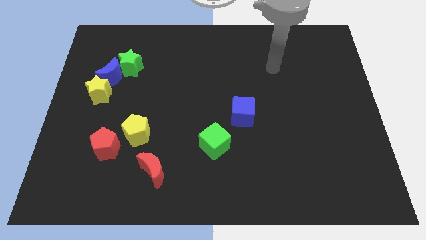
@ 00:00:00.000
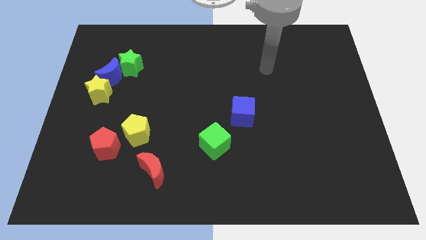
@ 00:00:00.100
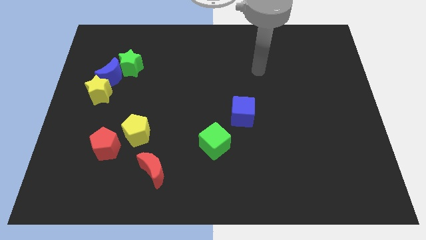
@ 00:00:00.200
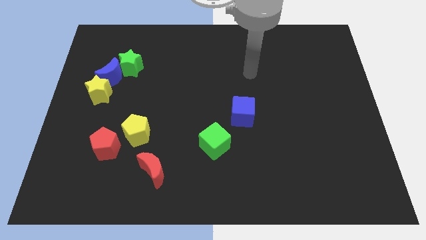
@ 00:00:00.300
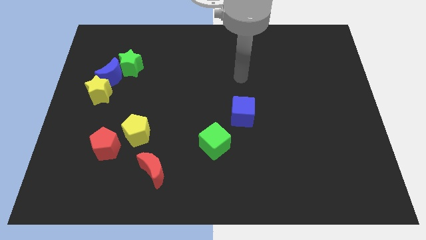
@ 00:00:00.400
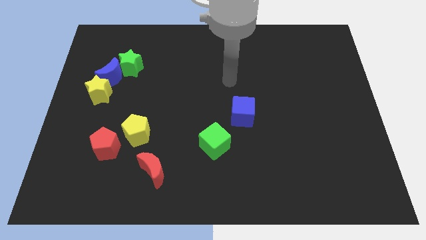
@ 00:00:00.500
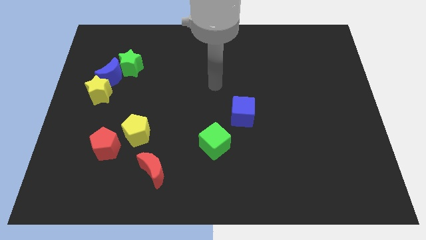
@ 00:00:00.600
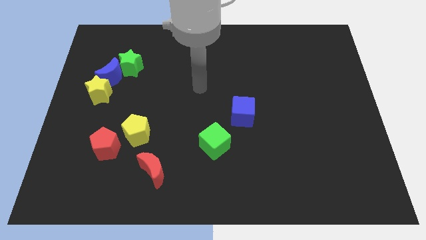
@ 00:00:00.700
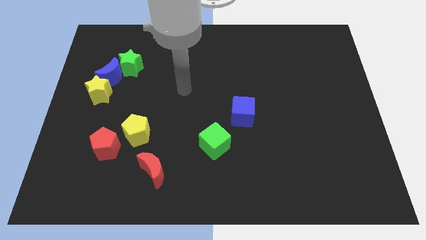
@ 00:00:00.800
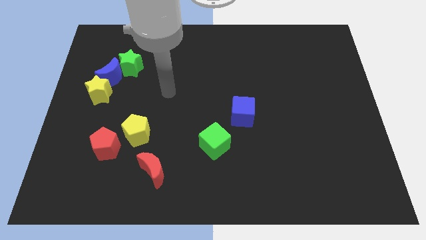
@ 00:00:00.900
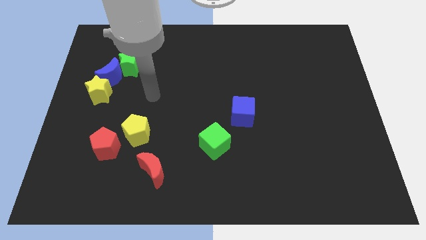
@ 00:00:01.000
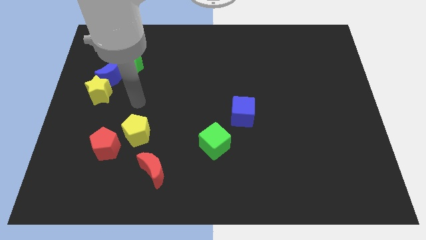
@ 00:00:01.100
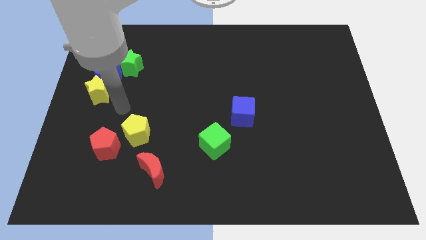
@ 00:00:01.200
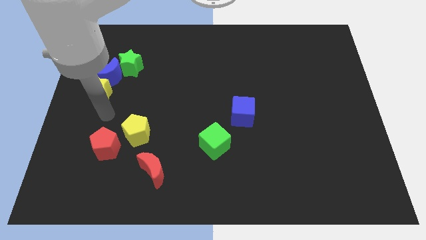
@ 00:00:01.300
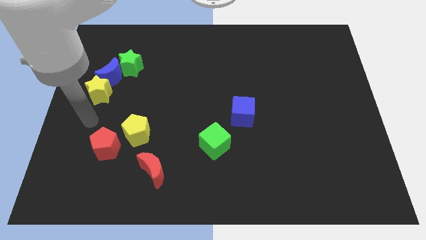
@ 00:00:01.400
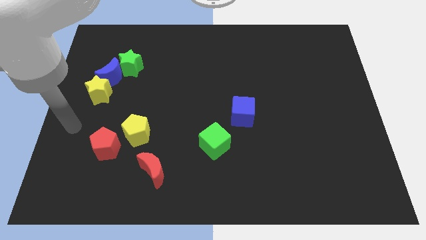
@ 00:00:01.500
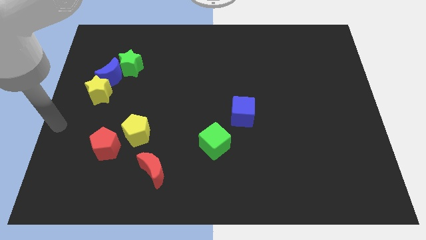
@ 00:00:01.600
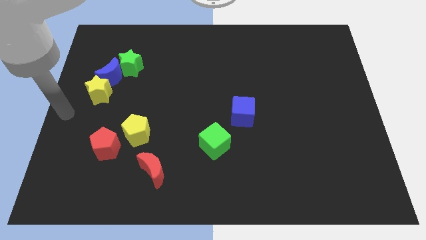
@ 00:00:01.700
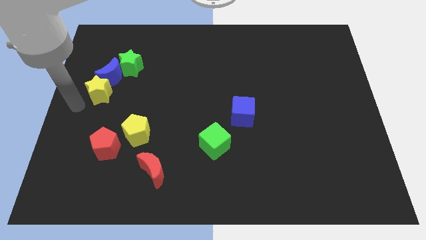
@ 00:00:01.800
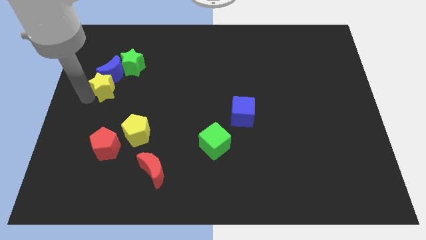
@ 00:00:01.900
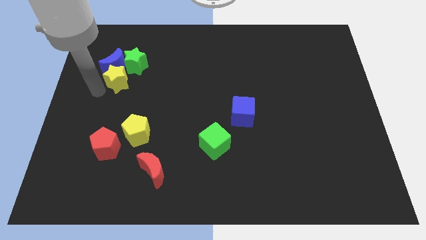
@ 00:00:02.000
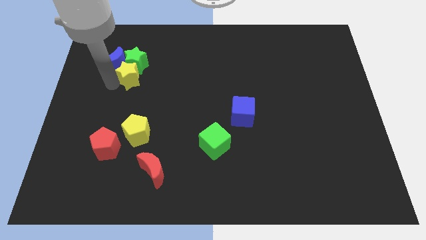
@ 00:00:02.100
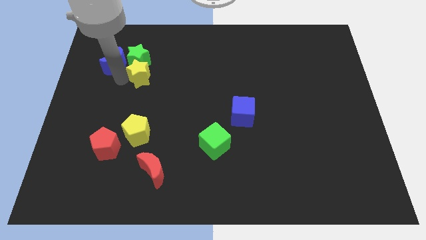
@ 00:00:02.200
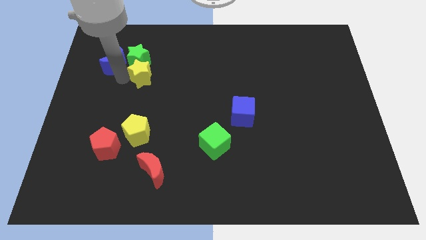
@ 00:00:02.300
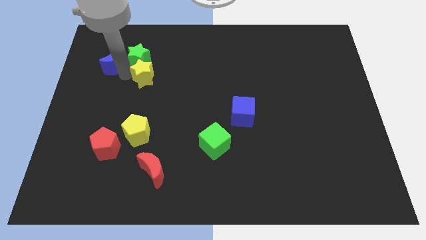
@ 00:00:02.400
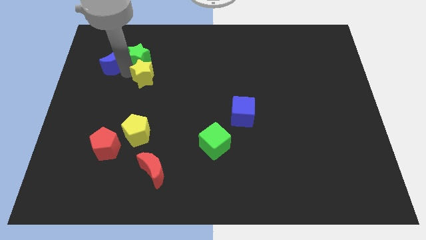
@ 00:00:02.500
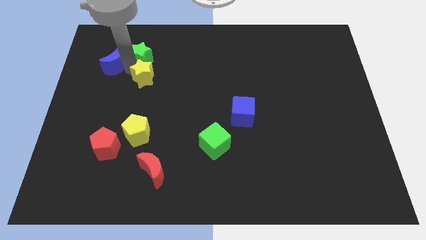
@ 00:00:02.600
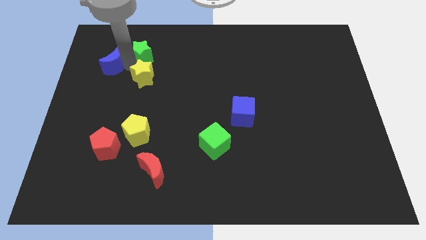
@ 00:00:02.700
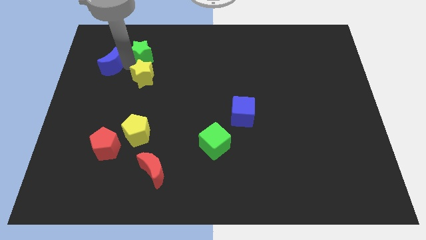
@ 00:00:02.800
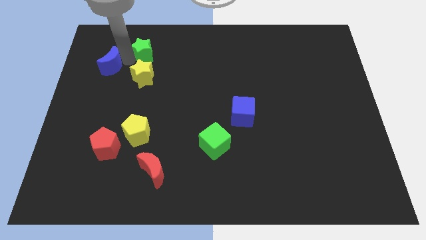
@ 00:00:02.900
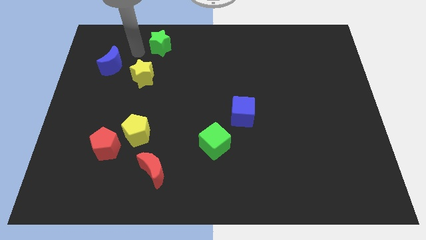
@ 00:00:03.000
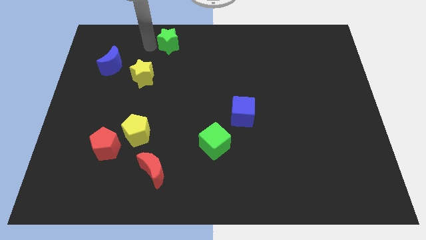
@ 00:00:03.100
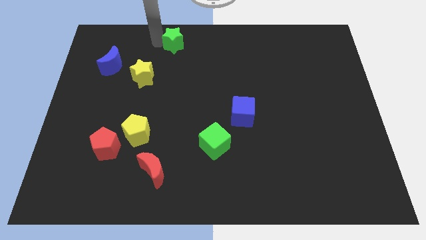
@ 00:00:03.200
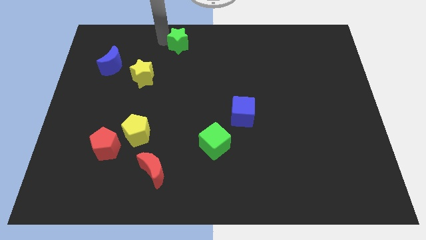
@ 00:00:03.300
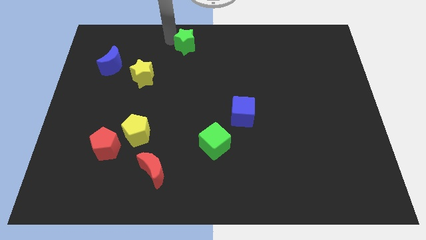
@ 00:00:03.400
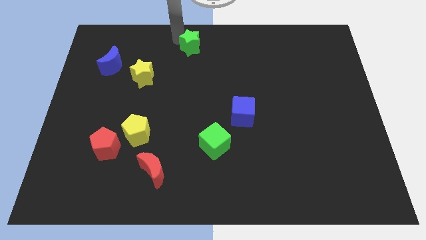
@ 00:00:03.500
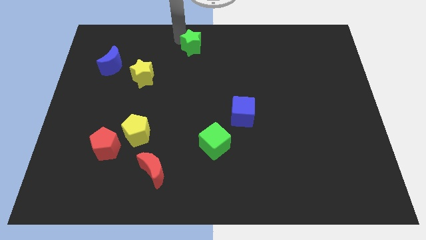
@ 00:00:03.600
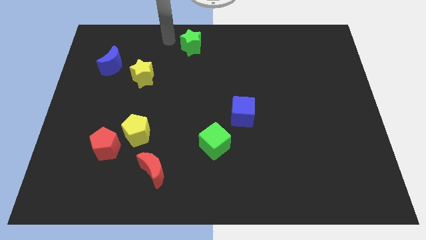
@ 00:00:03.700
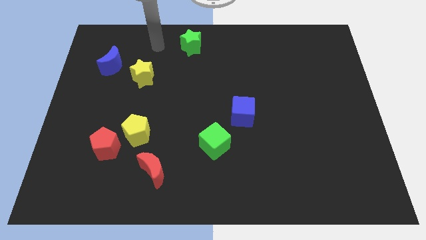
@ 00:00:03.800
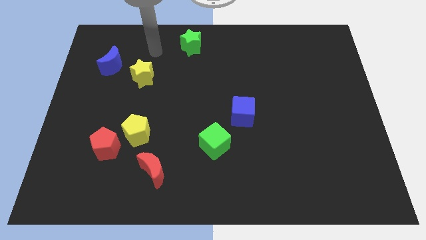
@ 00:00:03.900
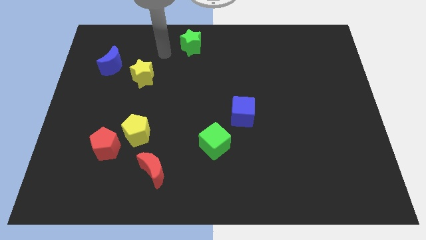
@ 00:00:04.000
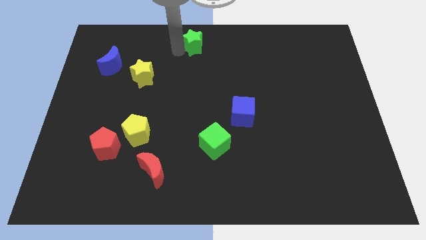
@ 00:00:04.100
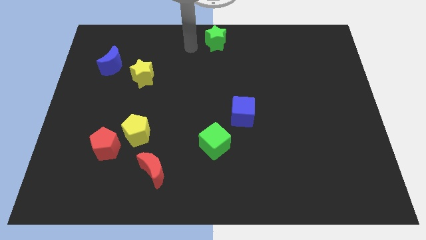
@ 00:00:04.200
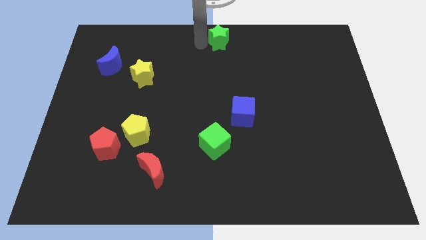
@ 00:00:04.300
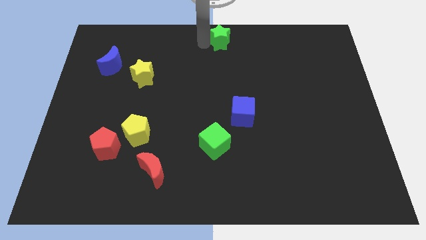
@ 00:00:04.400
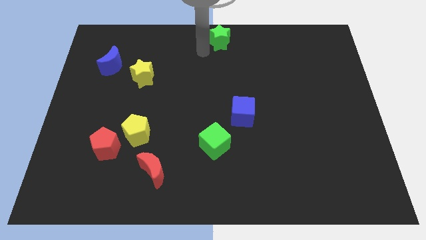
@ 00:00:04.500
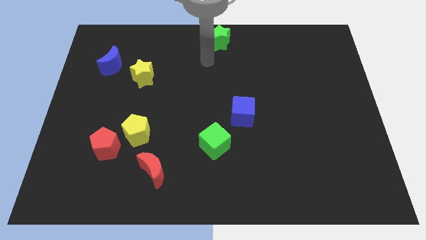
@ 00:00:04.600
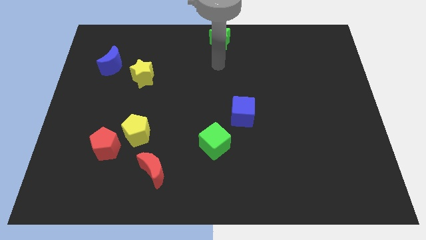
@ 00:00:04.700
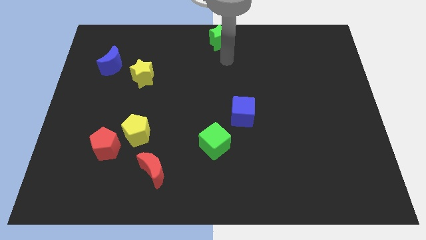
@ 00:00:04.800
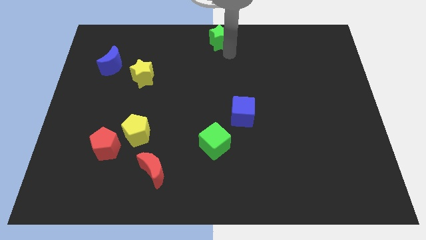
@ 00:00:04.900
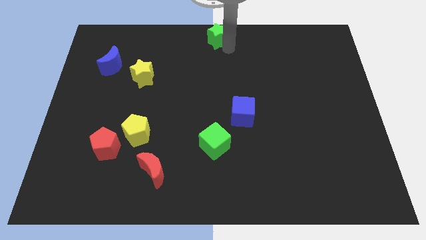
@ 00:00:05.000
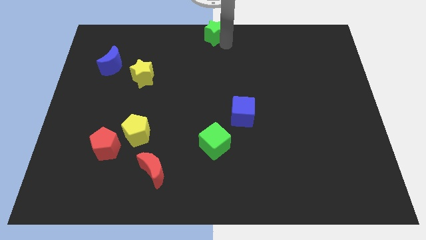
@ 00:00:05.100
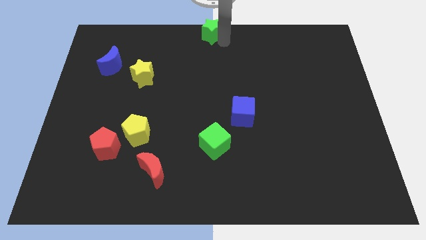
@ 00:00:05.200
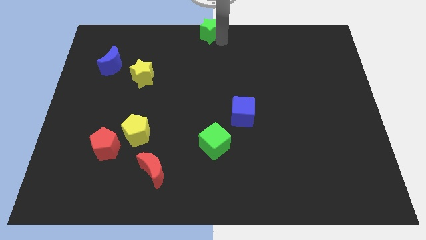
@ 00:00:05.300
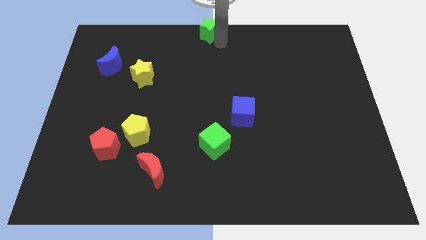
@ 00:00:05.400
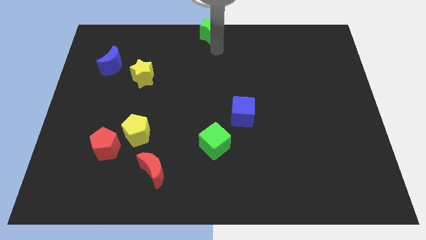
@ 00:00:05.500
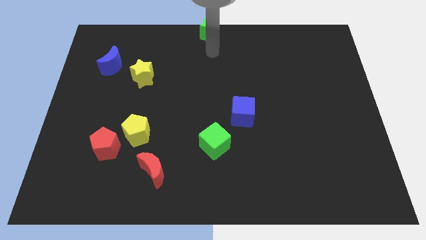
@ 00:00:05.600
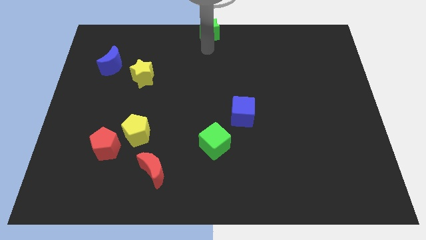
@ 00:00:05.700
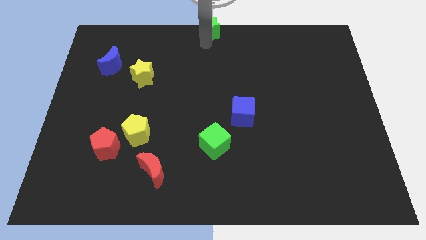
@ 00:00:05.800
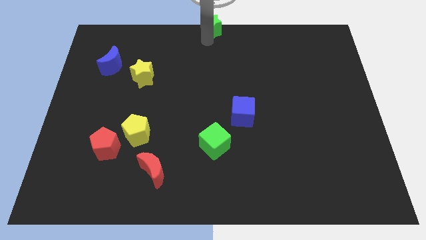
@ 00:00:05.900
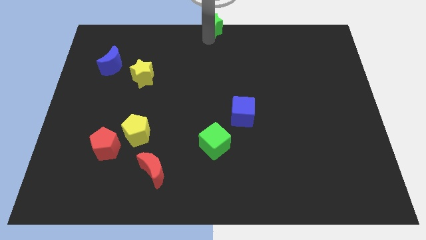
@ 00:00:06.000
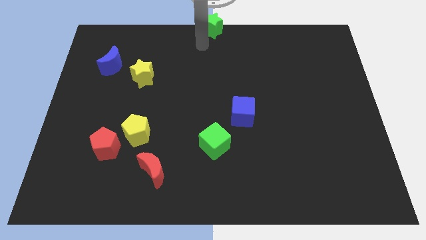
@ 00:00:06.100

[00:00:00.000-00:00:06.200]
push the green star to the top center of the board

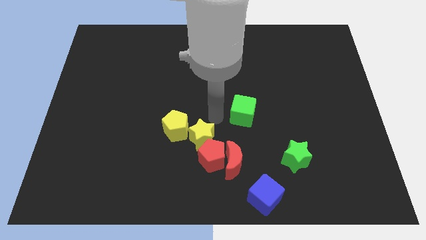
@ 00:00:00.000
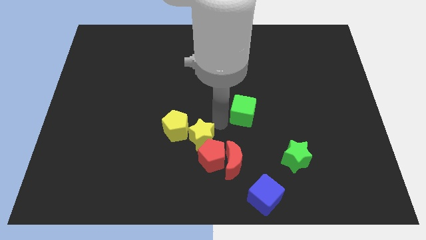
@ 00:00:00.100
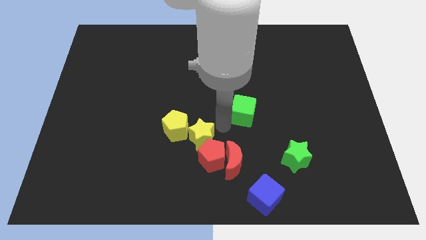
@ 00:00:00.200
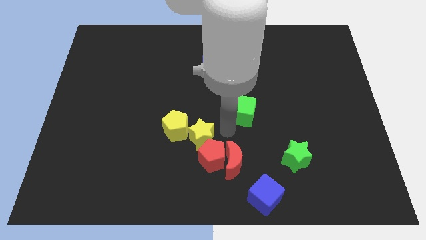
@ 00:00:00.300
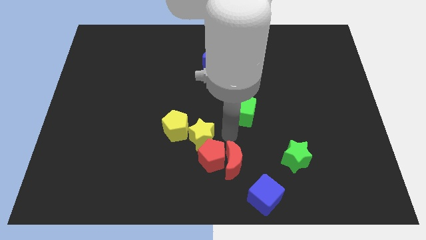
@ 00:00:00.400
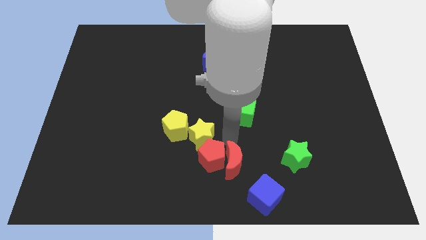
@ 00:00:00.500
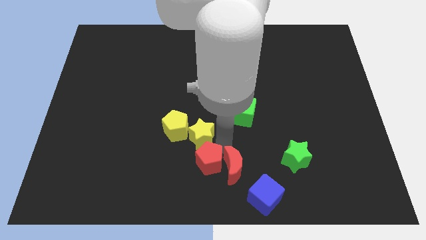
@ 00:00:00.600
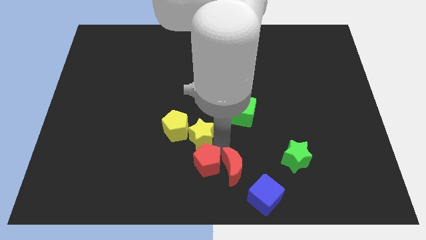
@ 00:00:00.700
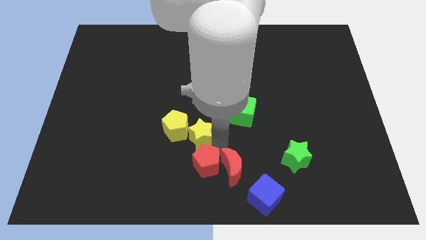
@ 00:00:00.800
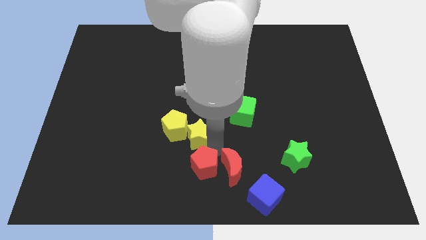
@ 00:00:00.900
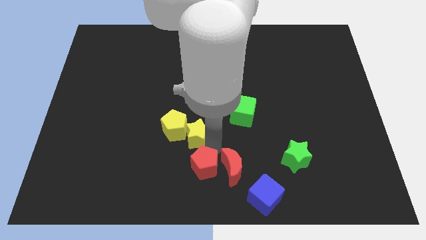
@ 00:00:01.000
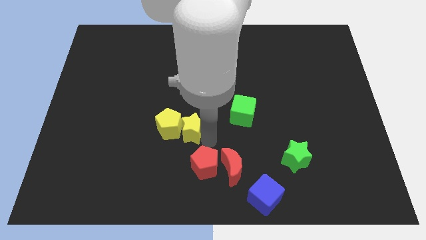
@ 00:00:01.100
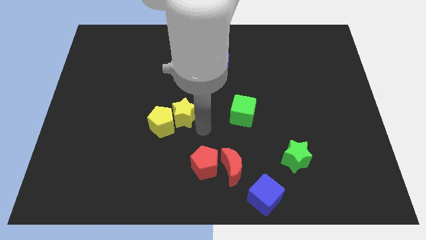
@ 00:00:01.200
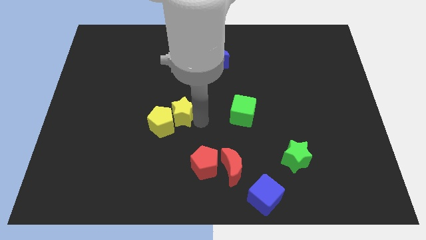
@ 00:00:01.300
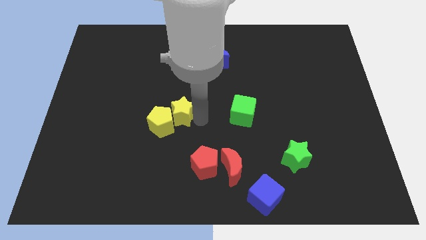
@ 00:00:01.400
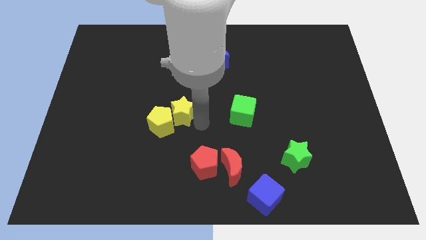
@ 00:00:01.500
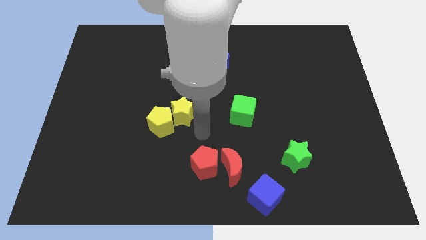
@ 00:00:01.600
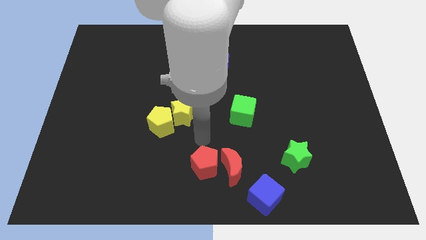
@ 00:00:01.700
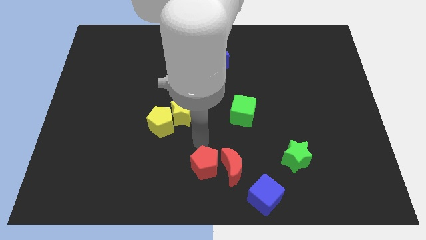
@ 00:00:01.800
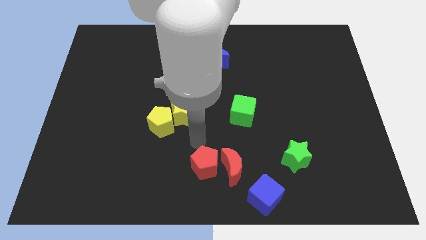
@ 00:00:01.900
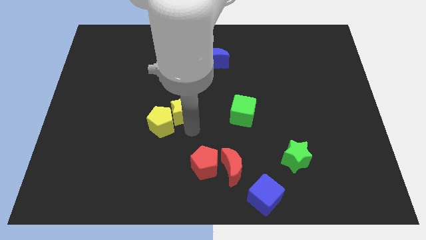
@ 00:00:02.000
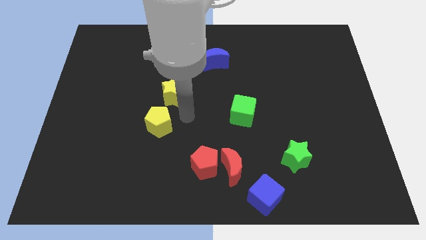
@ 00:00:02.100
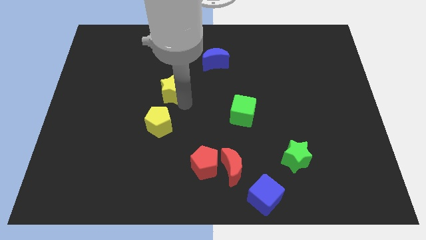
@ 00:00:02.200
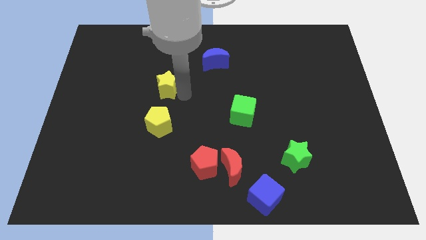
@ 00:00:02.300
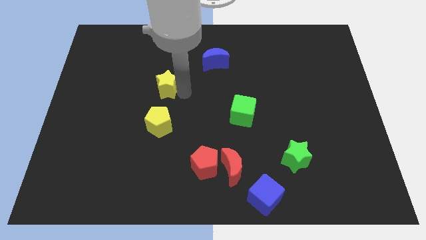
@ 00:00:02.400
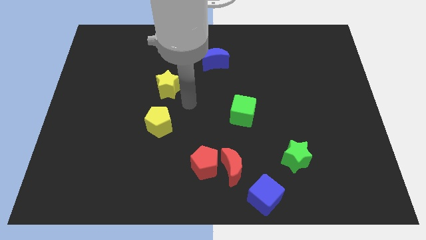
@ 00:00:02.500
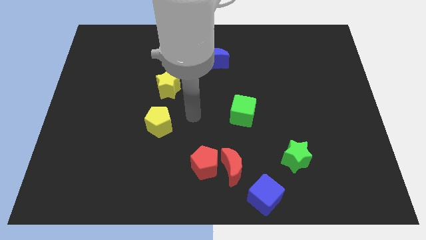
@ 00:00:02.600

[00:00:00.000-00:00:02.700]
place yellow star to the top of yellow pentagon
